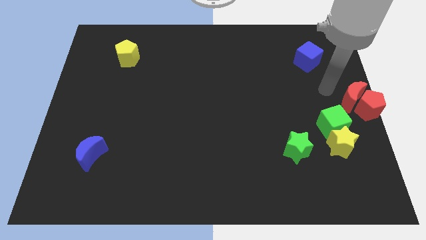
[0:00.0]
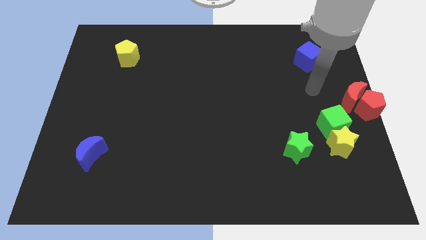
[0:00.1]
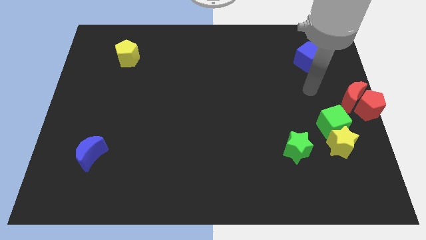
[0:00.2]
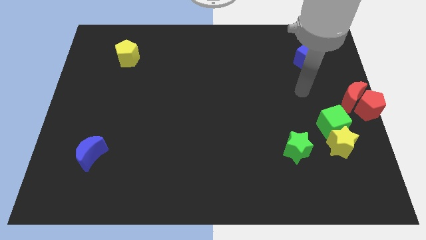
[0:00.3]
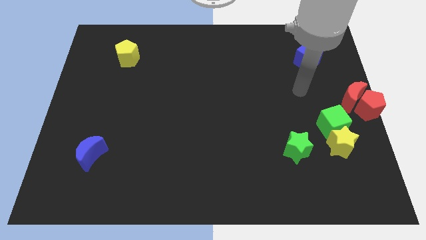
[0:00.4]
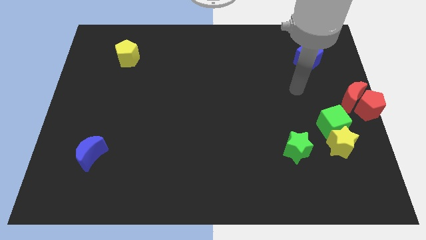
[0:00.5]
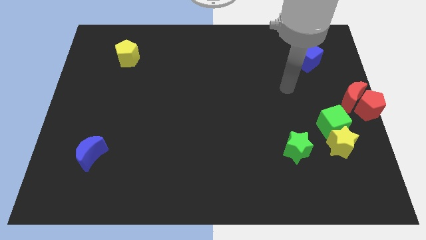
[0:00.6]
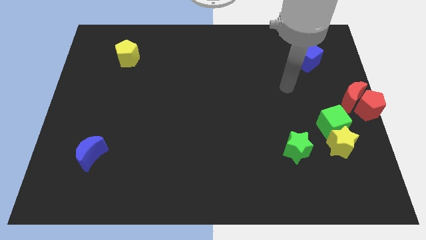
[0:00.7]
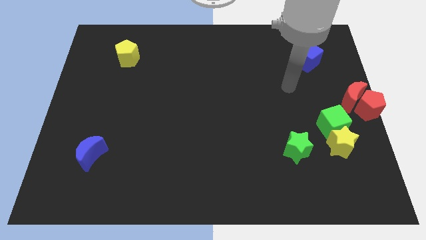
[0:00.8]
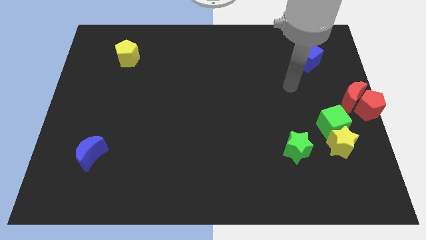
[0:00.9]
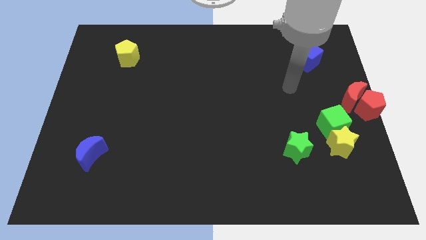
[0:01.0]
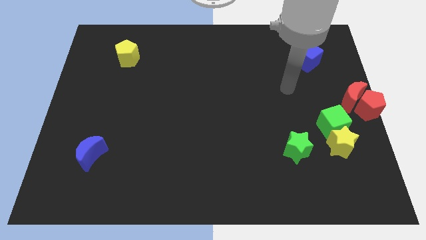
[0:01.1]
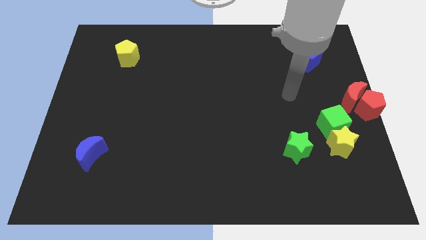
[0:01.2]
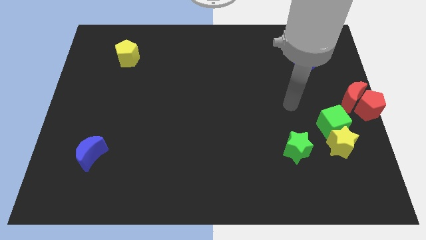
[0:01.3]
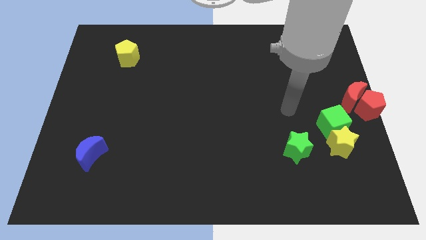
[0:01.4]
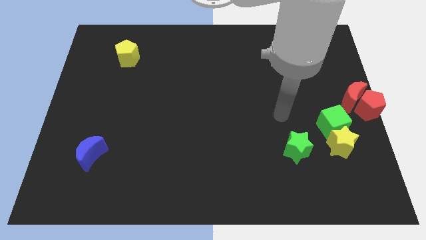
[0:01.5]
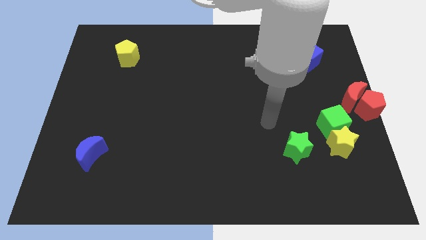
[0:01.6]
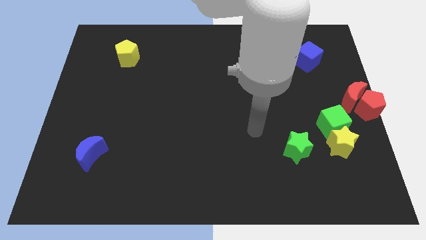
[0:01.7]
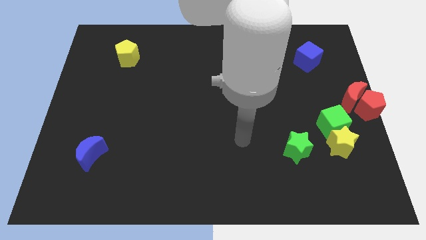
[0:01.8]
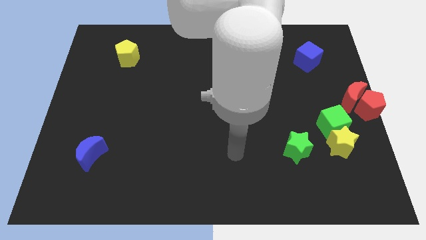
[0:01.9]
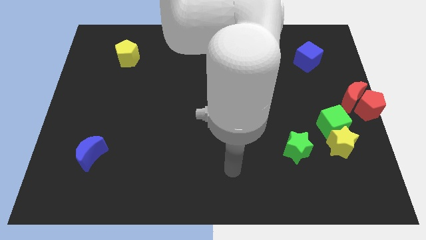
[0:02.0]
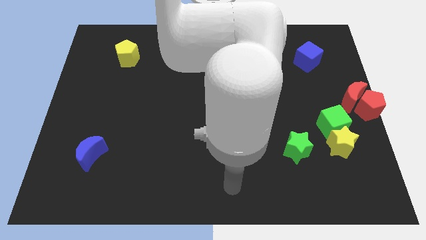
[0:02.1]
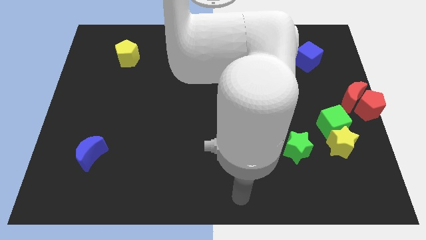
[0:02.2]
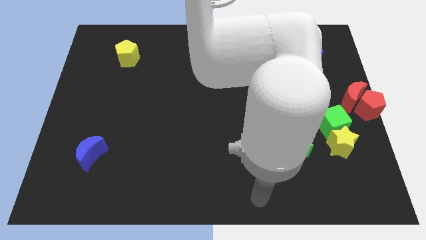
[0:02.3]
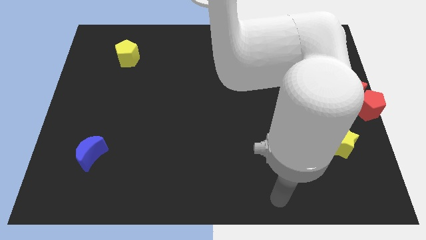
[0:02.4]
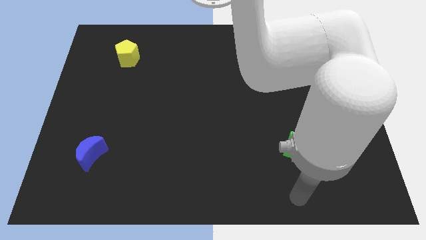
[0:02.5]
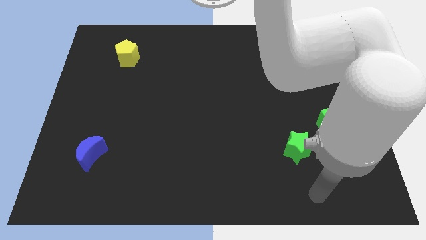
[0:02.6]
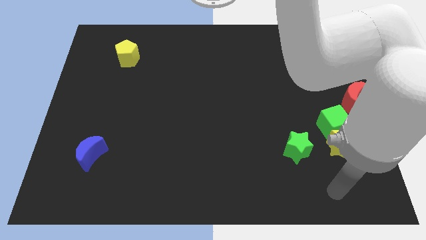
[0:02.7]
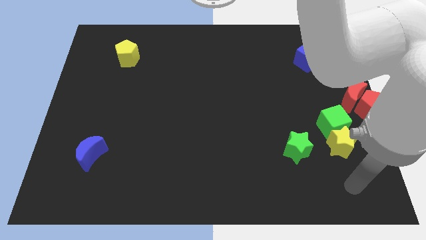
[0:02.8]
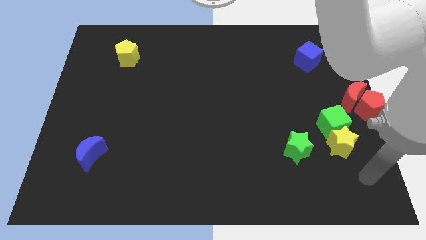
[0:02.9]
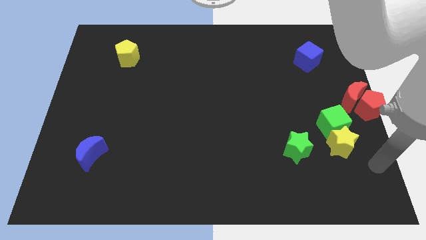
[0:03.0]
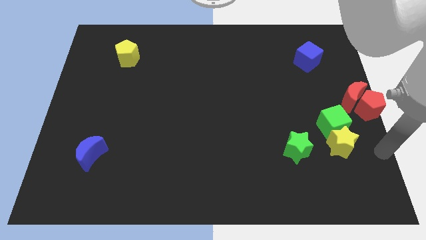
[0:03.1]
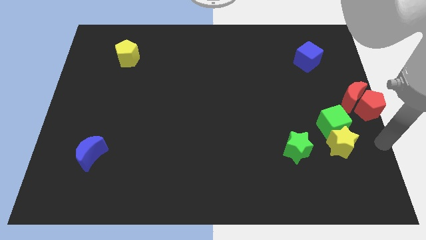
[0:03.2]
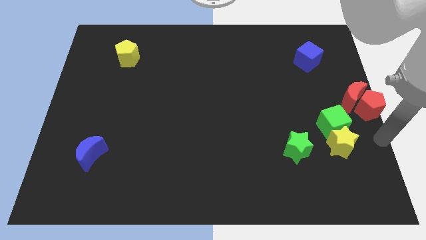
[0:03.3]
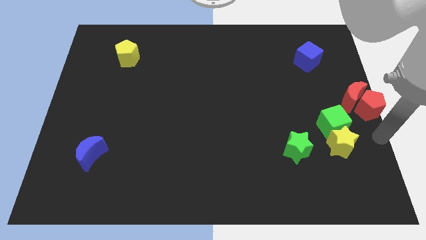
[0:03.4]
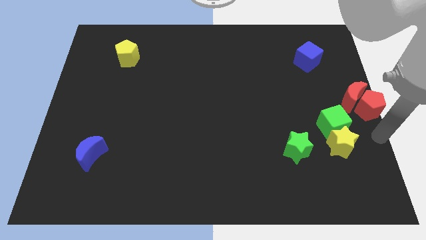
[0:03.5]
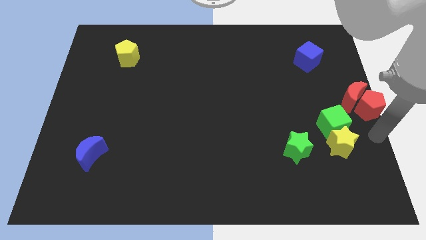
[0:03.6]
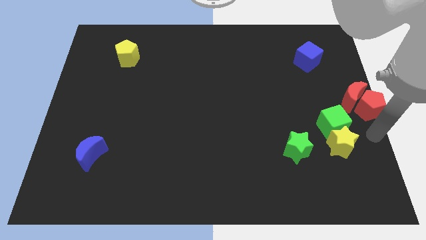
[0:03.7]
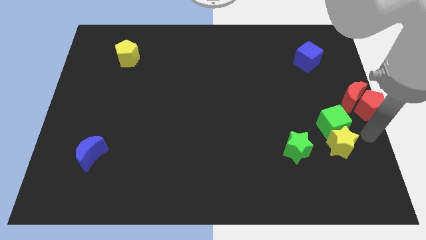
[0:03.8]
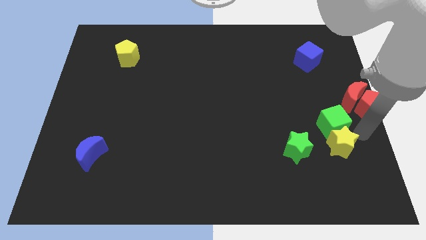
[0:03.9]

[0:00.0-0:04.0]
move your arm towards the yellow star

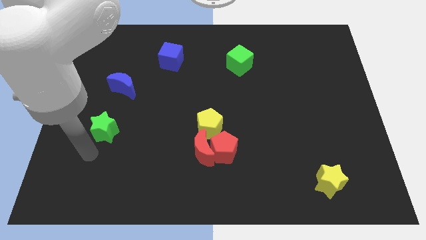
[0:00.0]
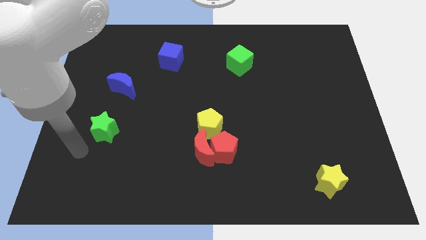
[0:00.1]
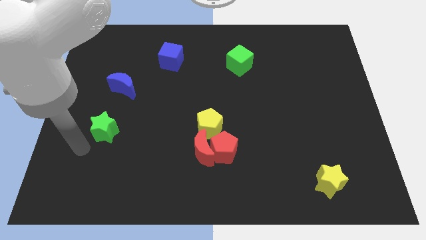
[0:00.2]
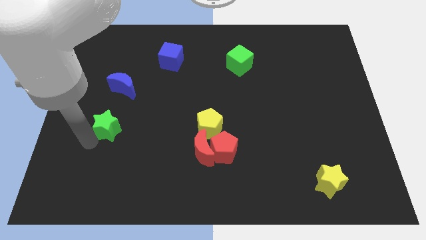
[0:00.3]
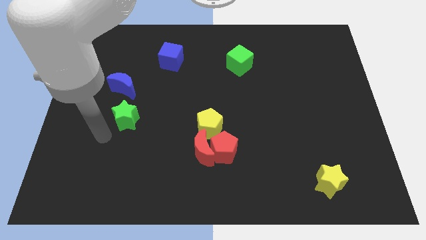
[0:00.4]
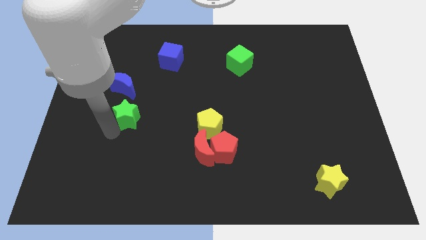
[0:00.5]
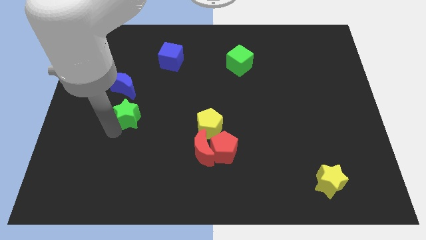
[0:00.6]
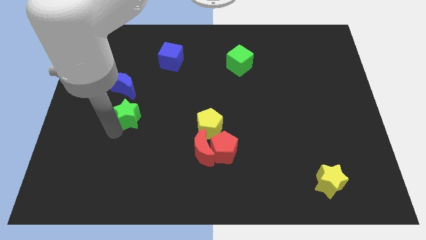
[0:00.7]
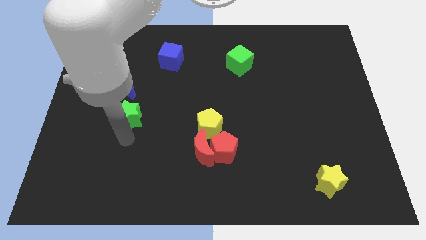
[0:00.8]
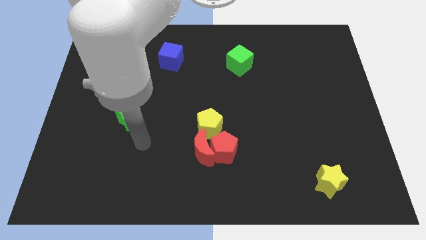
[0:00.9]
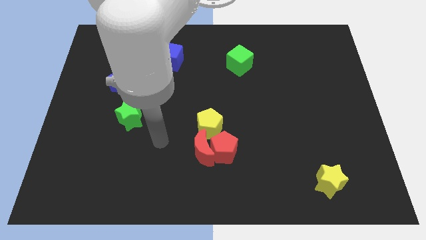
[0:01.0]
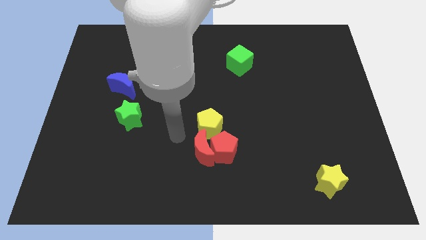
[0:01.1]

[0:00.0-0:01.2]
push the green star towards the bottom of the blue crescent

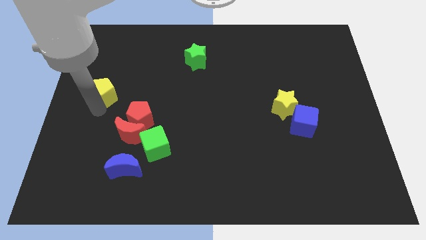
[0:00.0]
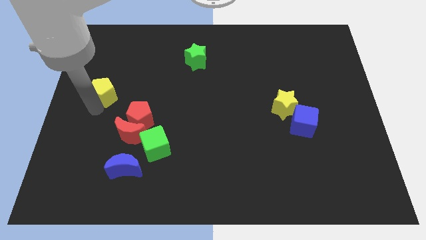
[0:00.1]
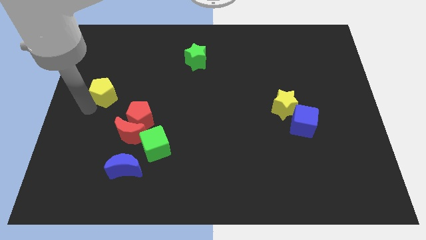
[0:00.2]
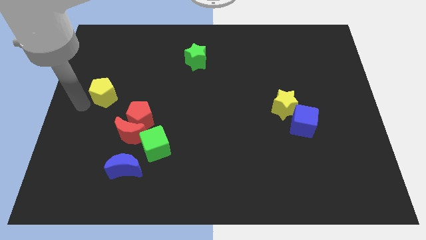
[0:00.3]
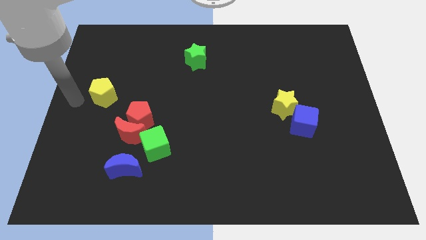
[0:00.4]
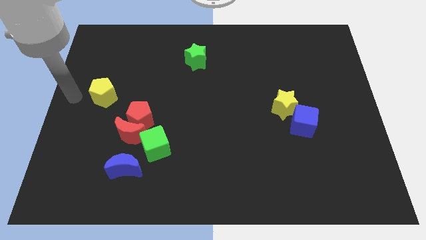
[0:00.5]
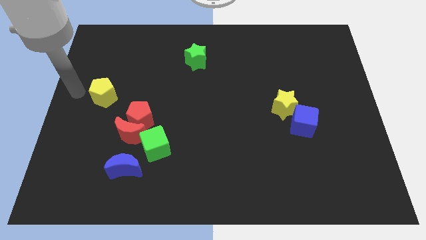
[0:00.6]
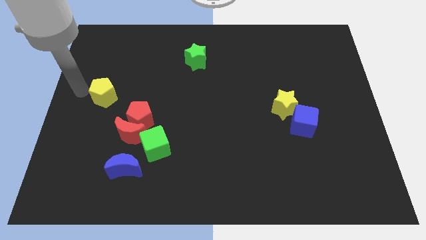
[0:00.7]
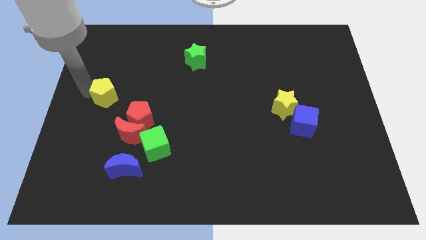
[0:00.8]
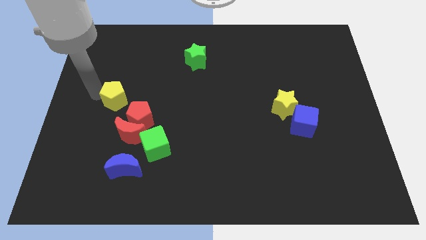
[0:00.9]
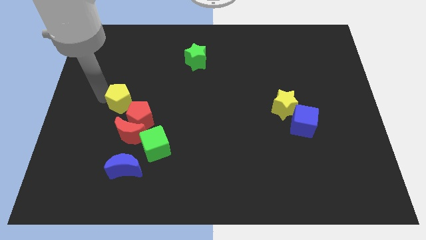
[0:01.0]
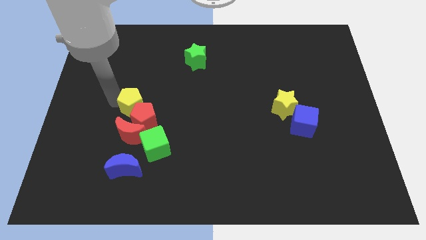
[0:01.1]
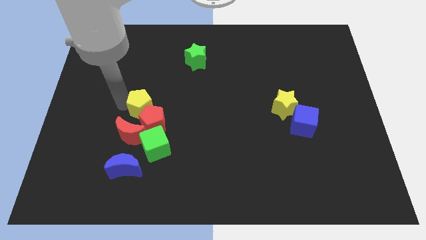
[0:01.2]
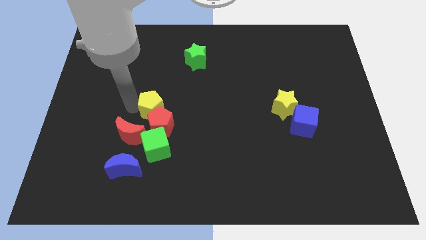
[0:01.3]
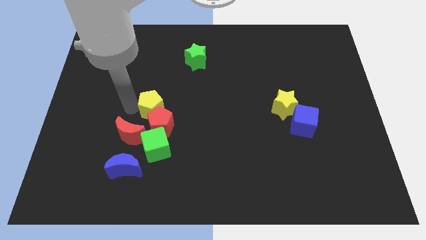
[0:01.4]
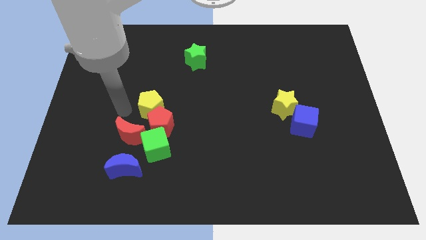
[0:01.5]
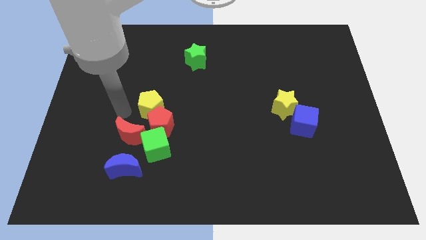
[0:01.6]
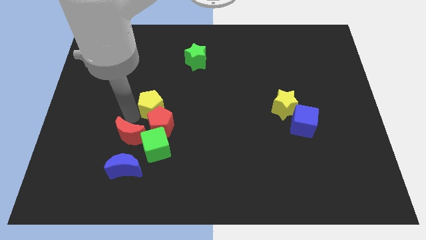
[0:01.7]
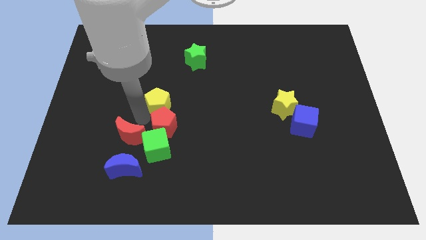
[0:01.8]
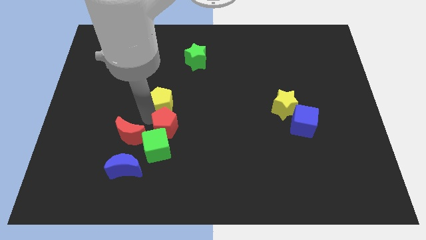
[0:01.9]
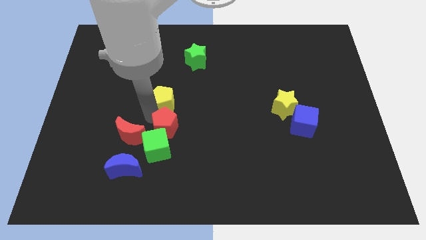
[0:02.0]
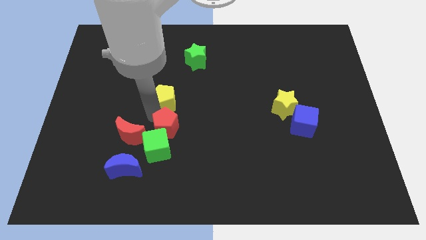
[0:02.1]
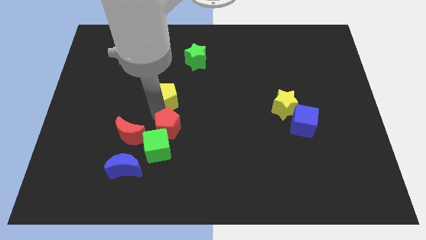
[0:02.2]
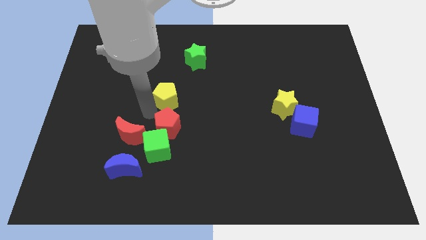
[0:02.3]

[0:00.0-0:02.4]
place the yellow pentagon above the red pentagon

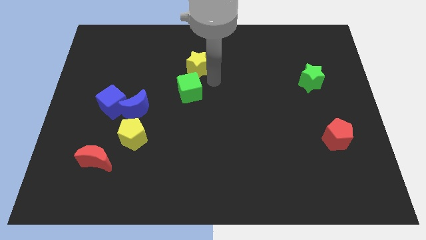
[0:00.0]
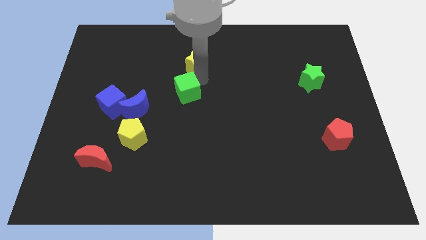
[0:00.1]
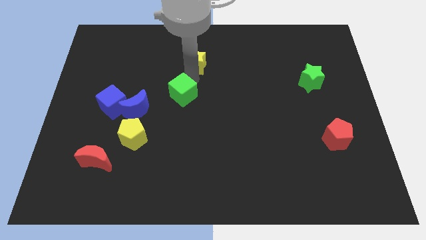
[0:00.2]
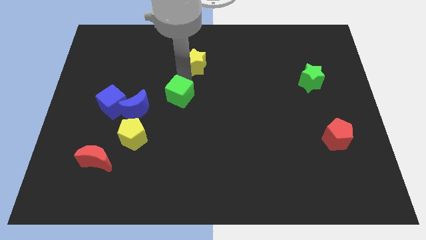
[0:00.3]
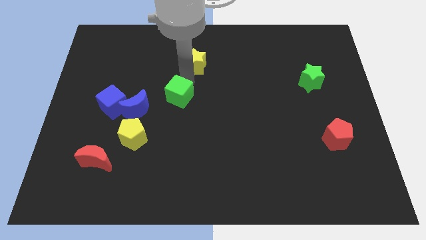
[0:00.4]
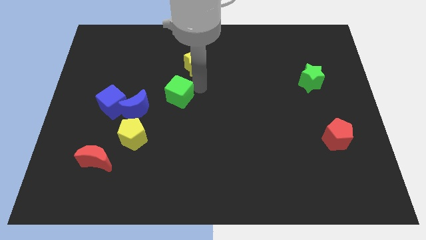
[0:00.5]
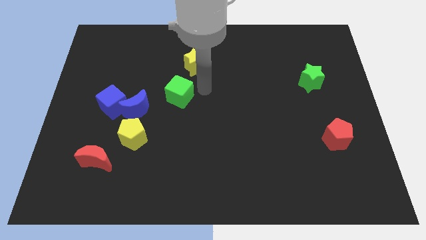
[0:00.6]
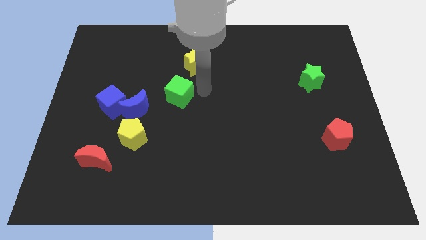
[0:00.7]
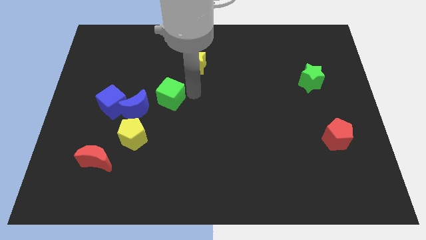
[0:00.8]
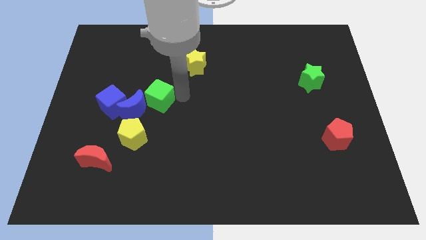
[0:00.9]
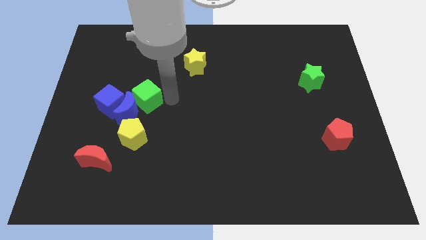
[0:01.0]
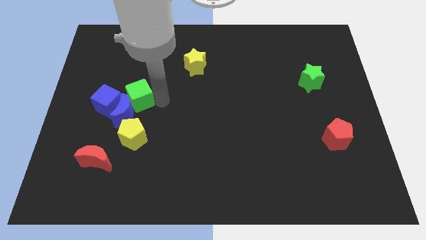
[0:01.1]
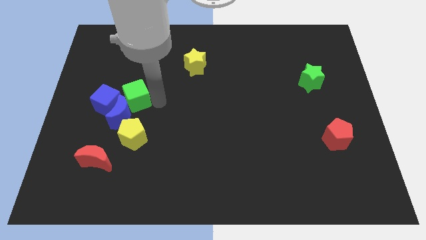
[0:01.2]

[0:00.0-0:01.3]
move the green cube into the blue moon
